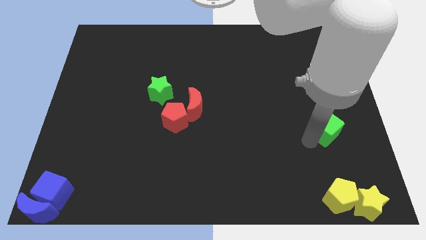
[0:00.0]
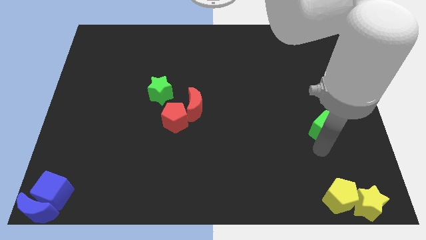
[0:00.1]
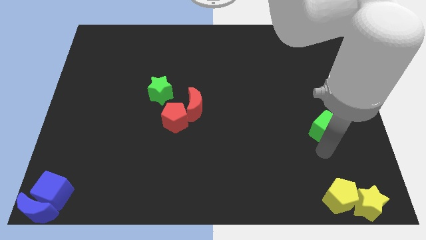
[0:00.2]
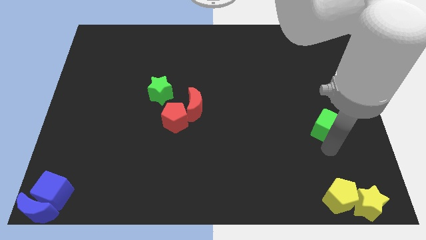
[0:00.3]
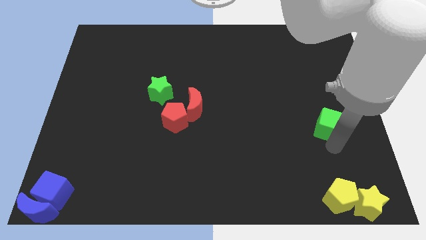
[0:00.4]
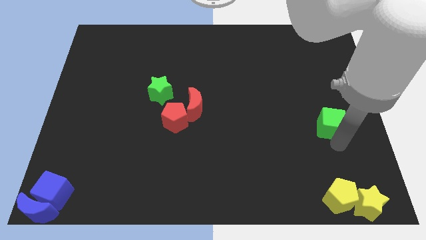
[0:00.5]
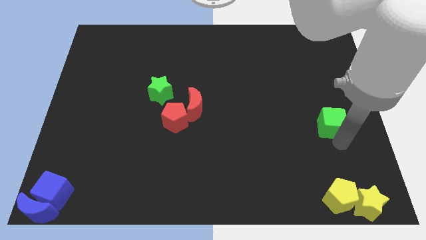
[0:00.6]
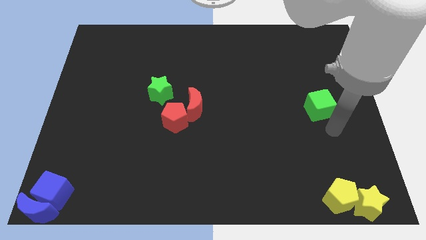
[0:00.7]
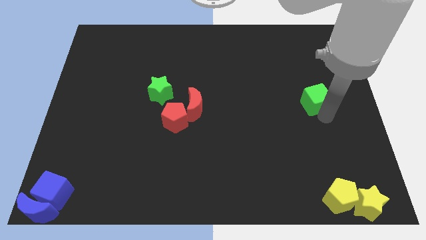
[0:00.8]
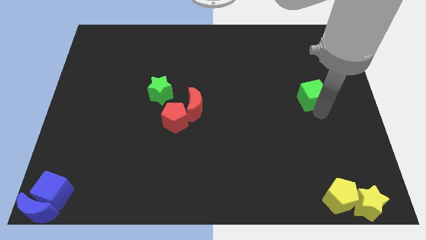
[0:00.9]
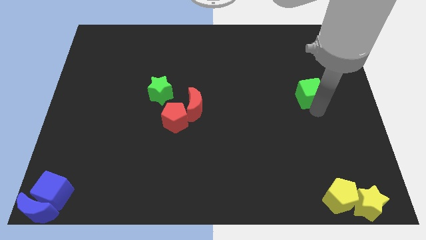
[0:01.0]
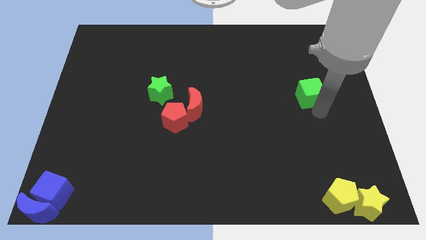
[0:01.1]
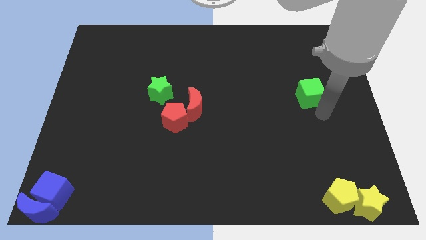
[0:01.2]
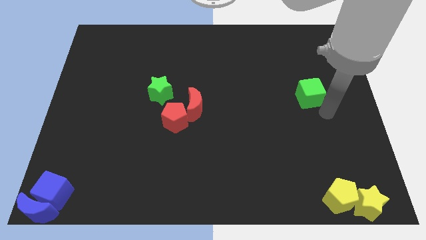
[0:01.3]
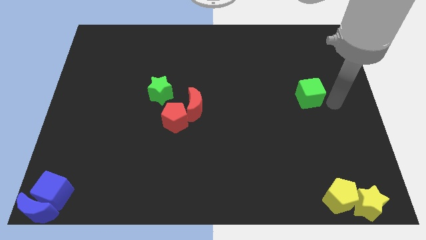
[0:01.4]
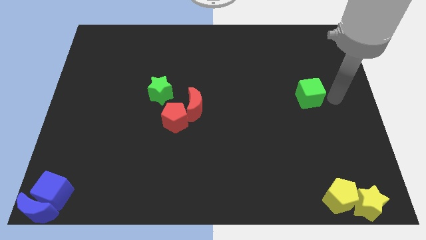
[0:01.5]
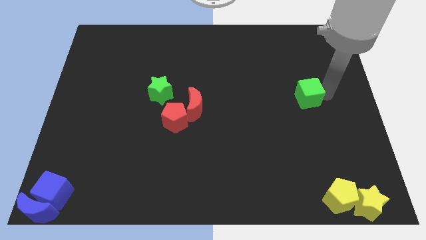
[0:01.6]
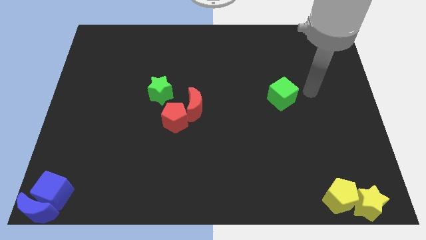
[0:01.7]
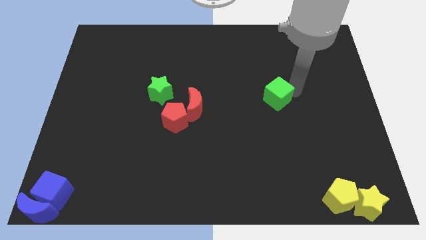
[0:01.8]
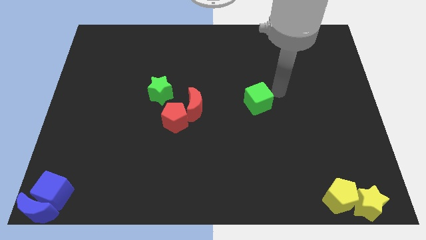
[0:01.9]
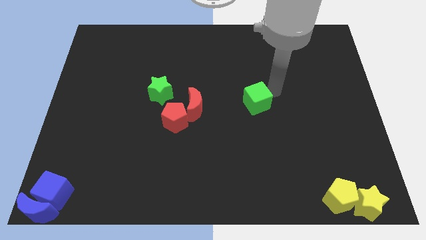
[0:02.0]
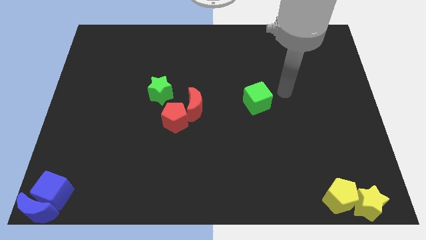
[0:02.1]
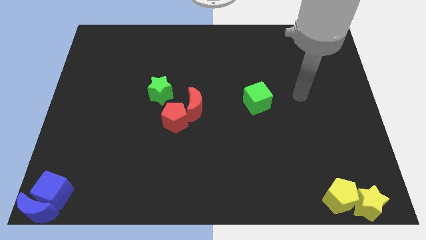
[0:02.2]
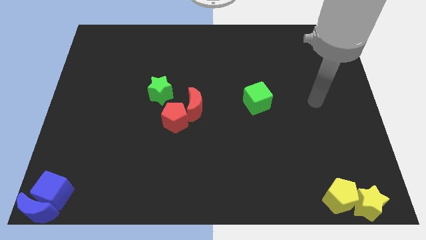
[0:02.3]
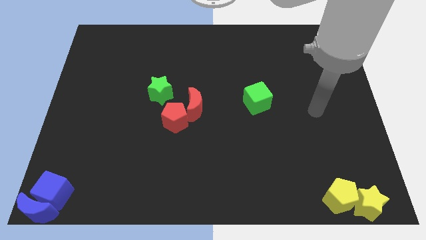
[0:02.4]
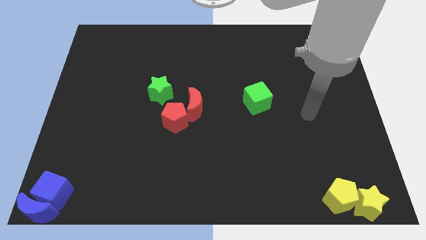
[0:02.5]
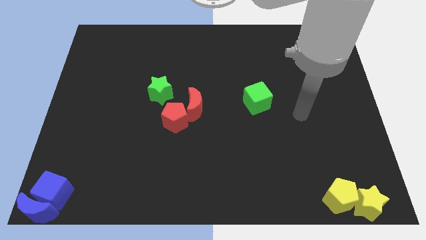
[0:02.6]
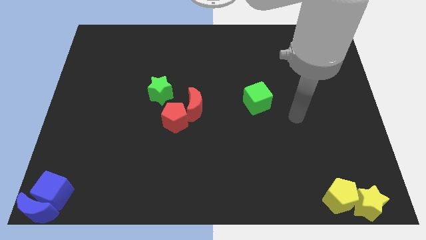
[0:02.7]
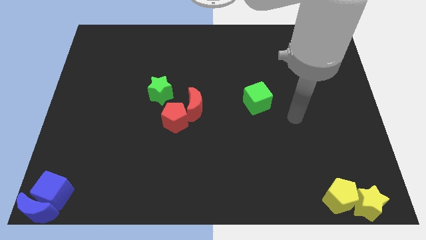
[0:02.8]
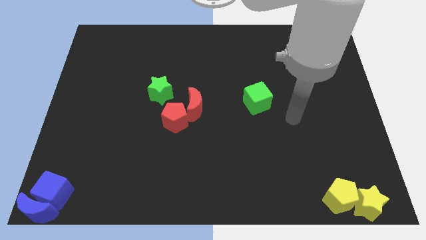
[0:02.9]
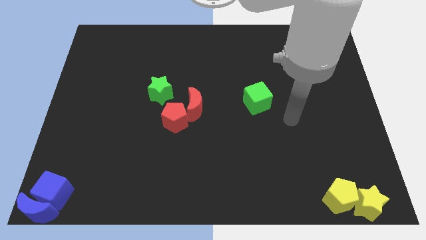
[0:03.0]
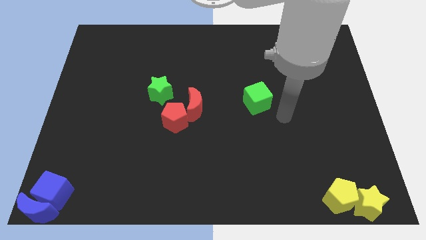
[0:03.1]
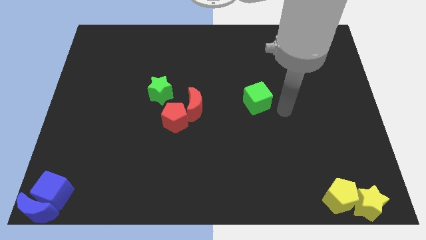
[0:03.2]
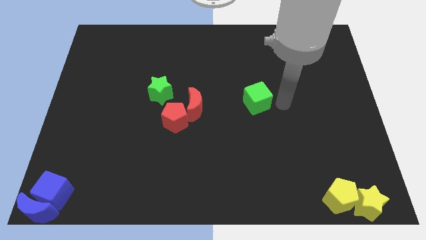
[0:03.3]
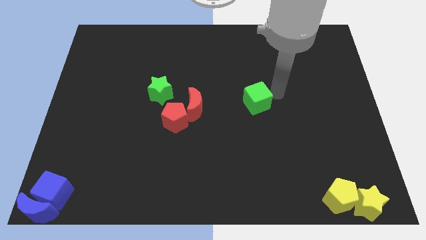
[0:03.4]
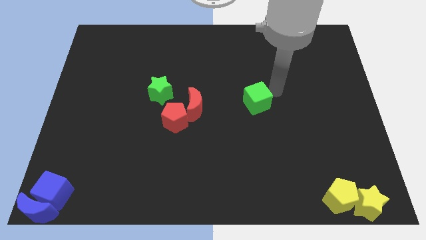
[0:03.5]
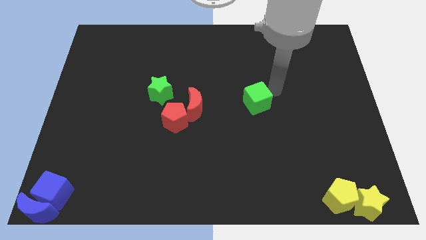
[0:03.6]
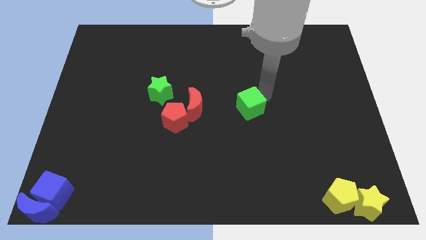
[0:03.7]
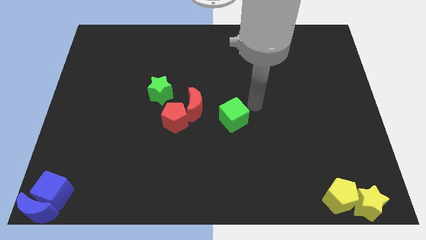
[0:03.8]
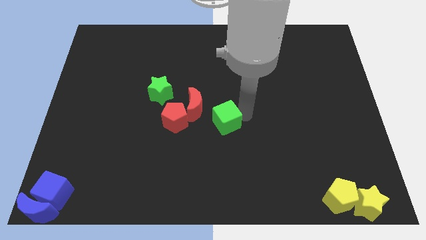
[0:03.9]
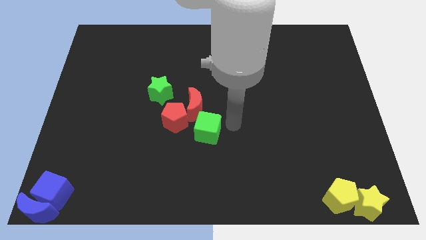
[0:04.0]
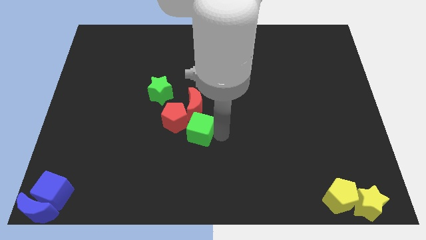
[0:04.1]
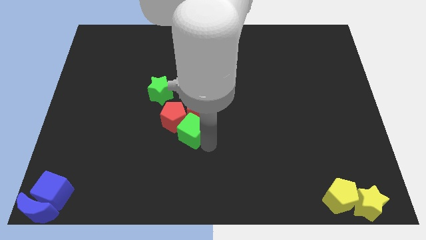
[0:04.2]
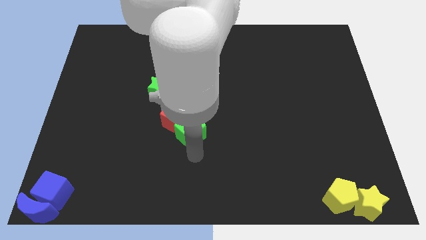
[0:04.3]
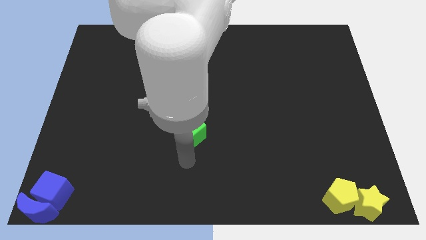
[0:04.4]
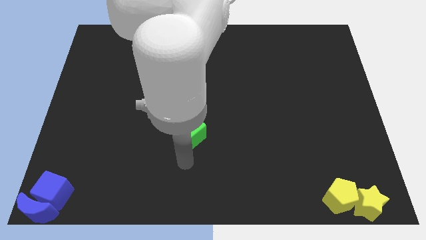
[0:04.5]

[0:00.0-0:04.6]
place the green cube down to the red moon

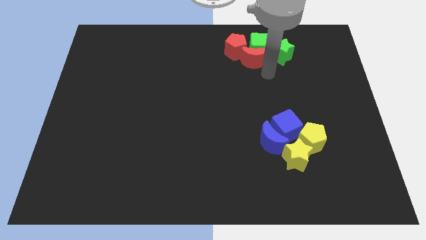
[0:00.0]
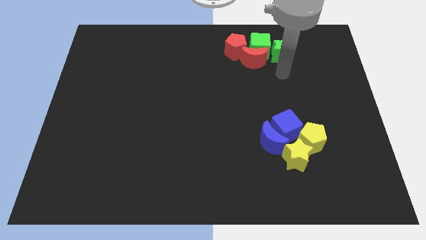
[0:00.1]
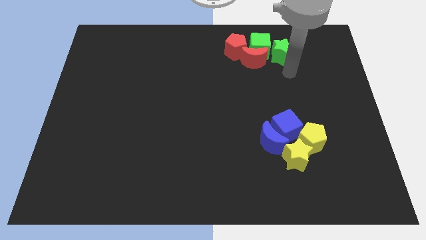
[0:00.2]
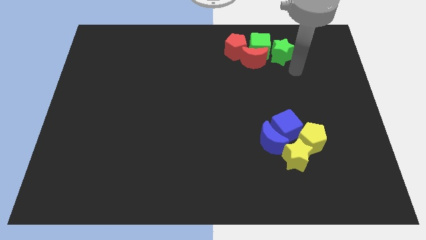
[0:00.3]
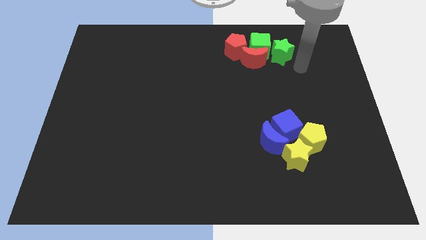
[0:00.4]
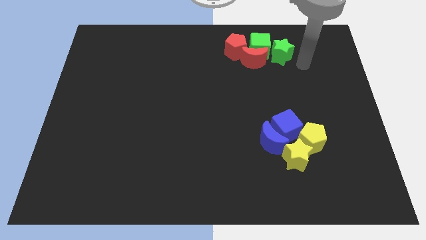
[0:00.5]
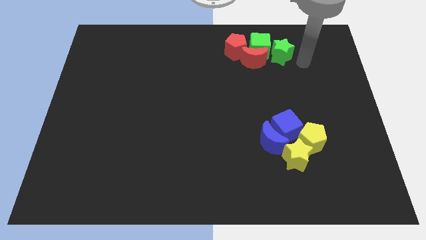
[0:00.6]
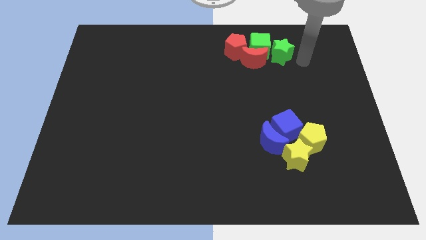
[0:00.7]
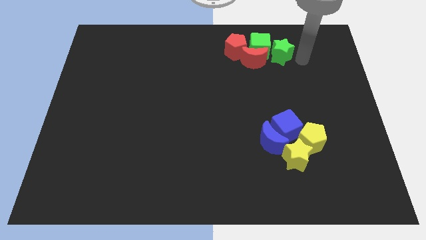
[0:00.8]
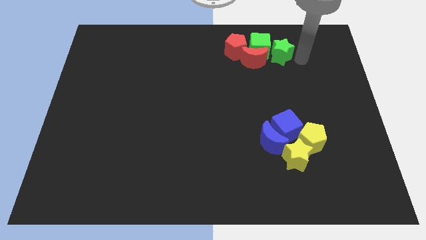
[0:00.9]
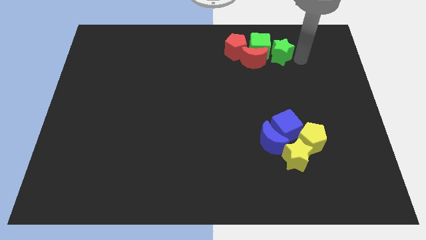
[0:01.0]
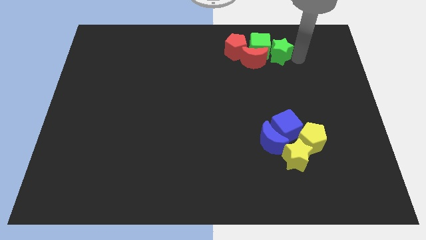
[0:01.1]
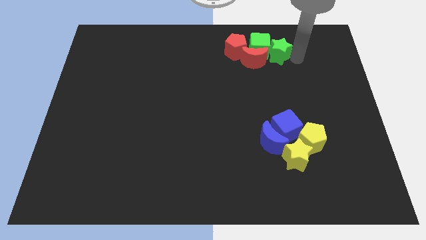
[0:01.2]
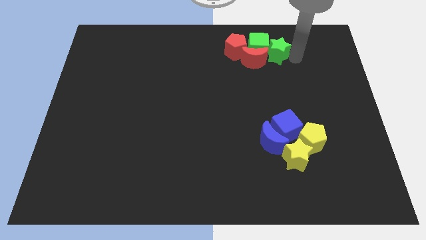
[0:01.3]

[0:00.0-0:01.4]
slide the green star slightly to the left

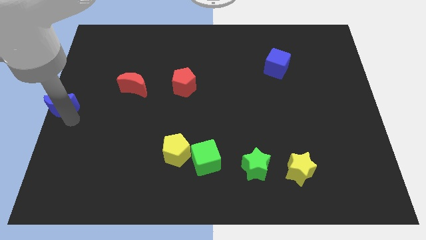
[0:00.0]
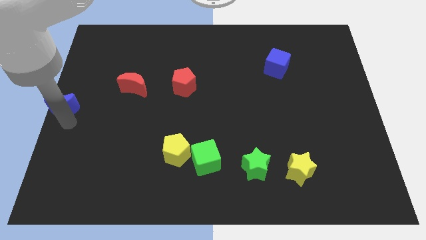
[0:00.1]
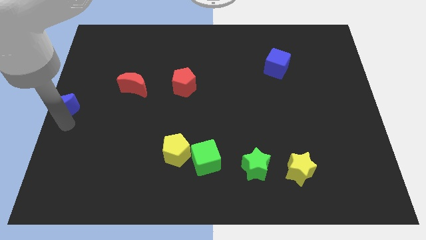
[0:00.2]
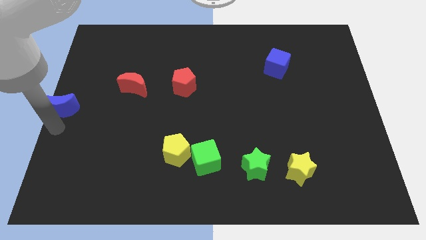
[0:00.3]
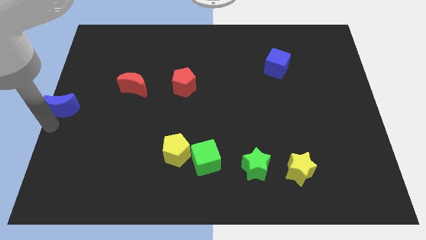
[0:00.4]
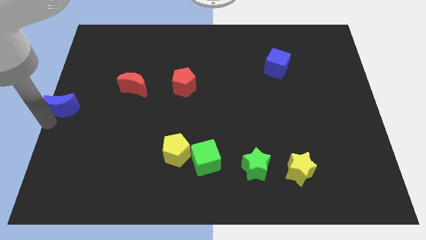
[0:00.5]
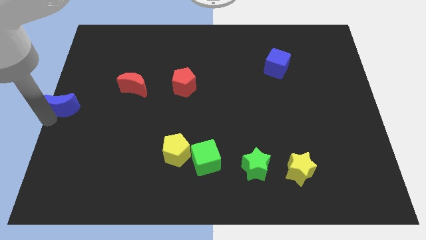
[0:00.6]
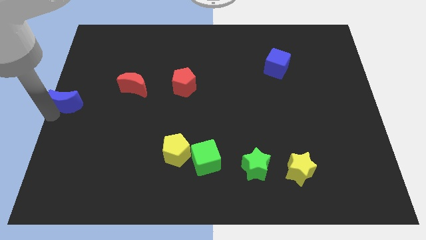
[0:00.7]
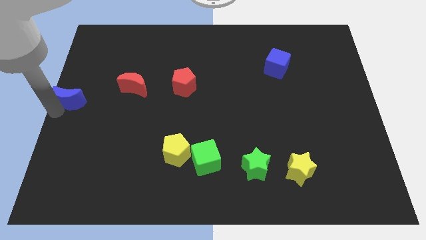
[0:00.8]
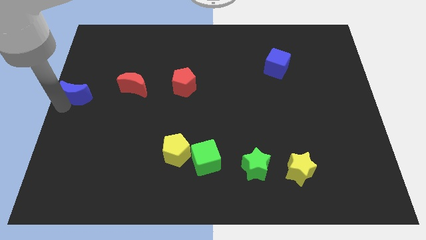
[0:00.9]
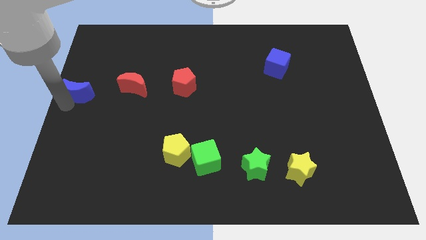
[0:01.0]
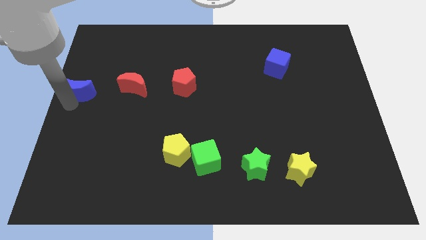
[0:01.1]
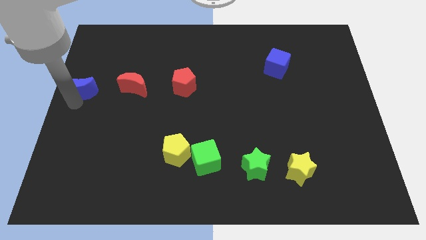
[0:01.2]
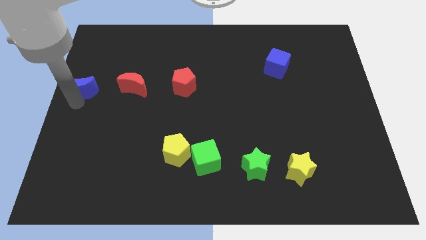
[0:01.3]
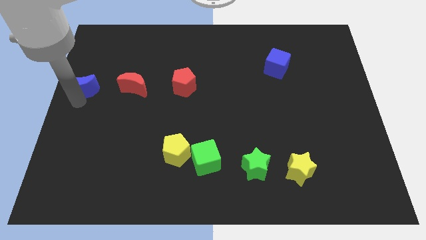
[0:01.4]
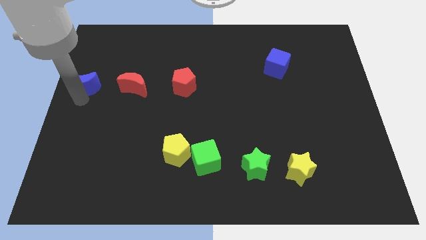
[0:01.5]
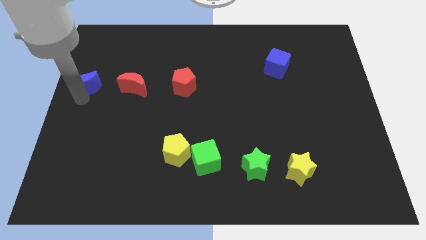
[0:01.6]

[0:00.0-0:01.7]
drag the blue moon to the left of the red moon

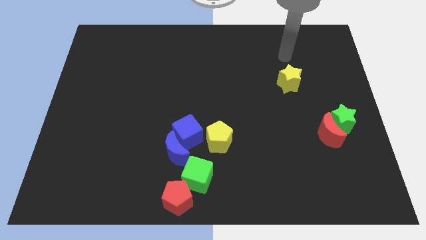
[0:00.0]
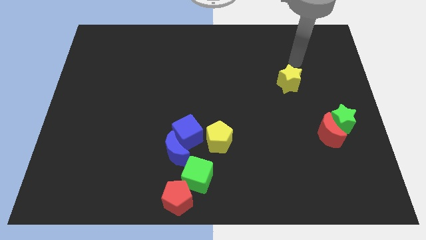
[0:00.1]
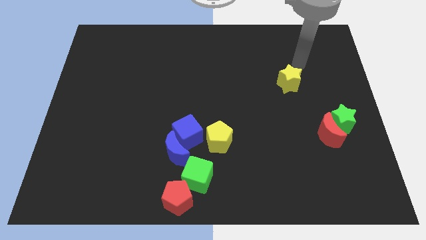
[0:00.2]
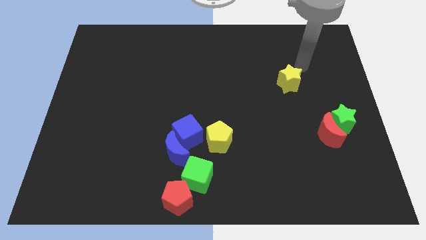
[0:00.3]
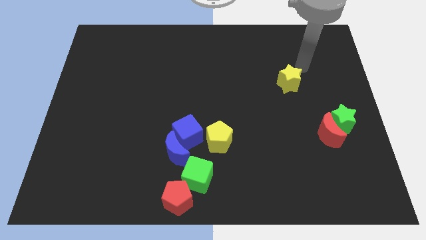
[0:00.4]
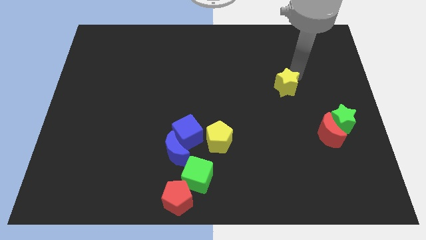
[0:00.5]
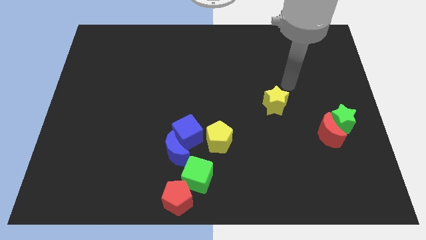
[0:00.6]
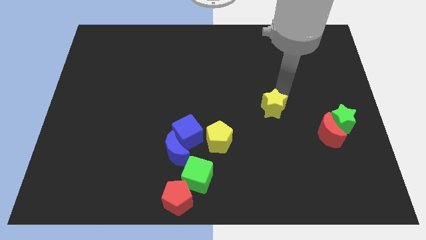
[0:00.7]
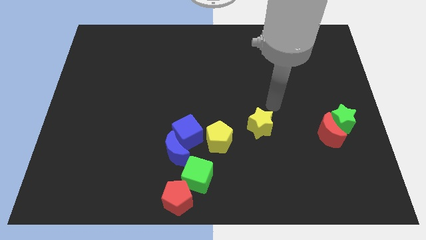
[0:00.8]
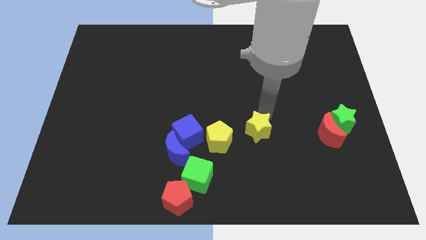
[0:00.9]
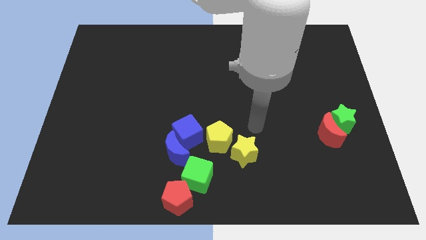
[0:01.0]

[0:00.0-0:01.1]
place the yellow star at the bottom right side of yellow pentagon
